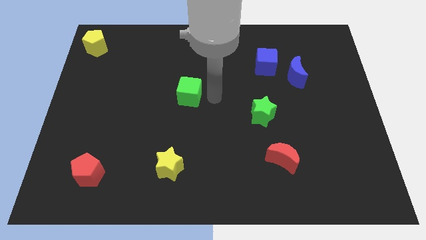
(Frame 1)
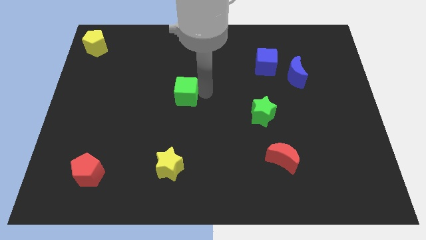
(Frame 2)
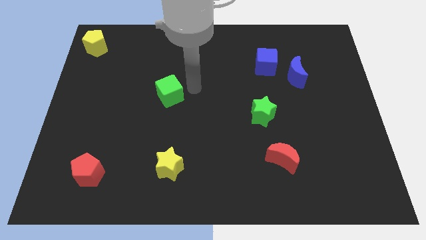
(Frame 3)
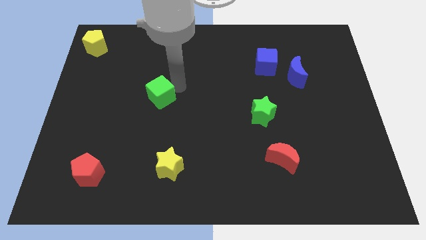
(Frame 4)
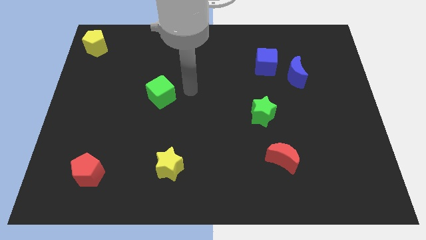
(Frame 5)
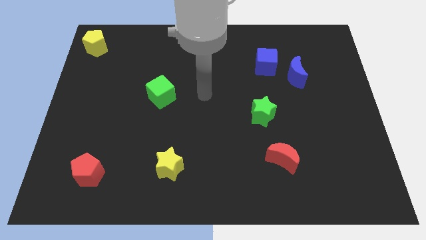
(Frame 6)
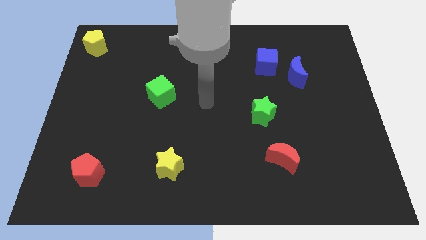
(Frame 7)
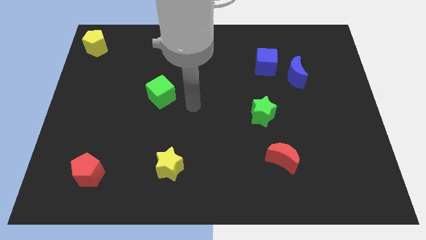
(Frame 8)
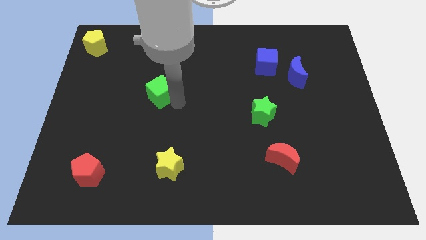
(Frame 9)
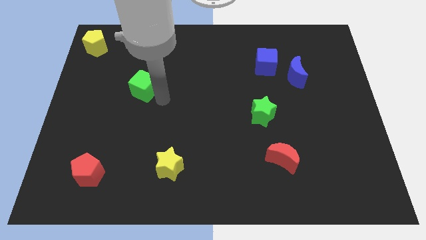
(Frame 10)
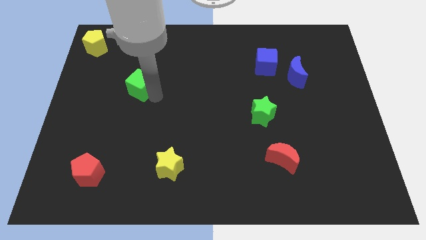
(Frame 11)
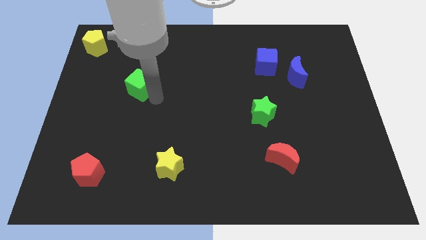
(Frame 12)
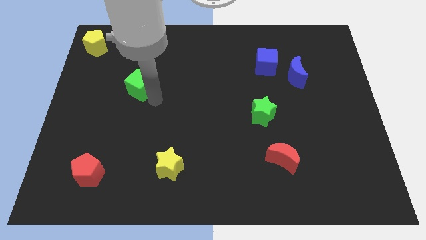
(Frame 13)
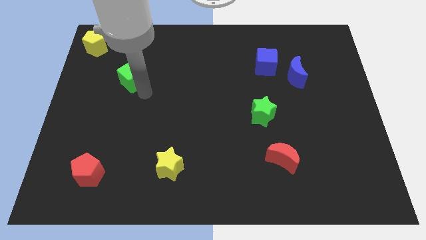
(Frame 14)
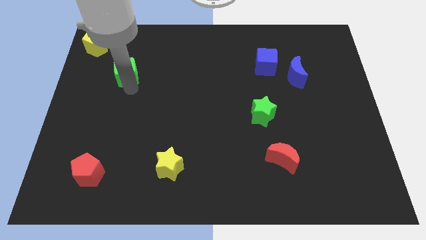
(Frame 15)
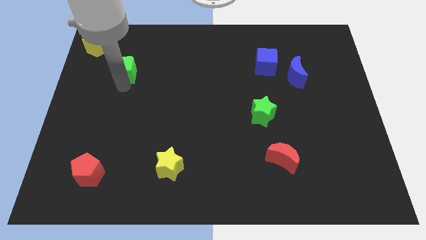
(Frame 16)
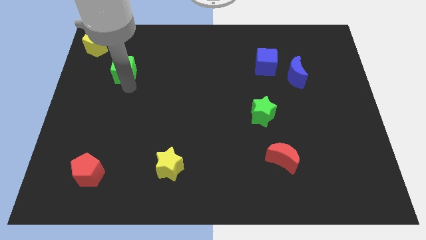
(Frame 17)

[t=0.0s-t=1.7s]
slide the green cube diagonally top left to the yellow star

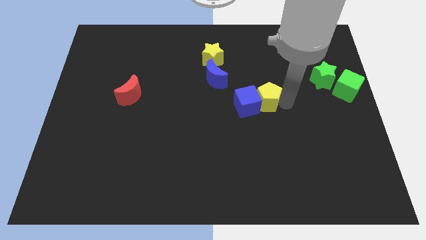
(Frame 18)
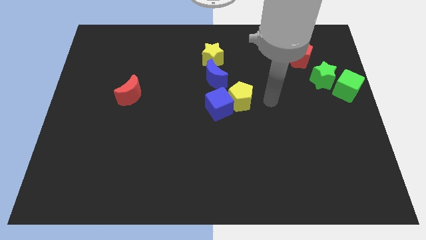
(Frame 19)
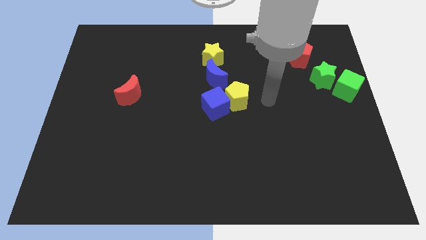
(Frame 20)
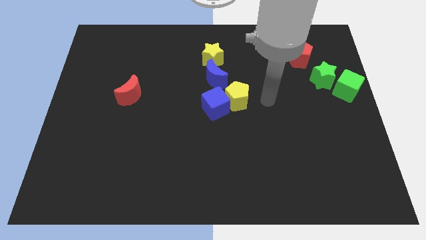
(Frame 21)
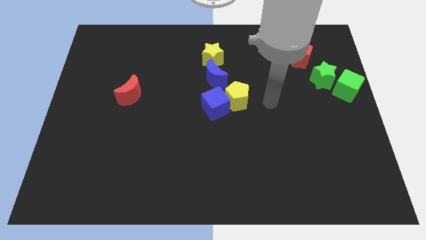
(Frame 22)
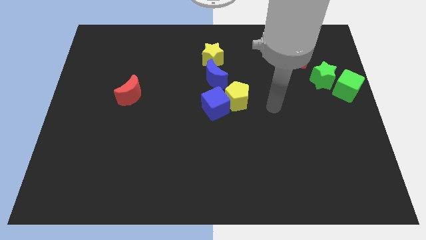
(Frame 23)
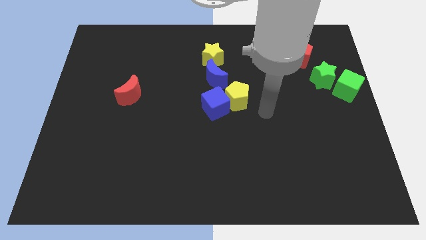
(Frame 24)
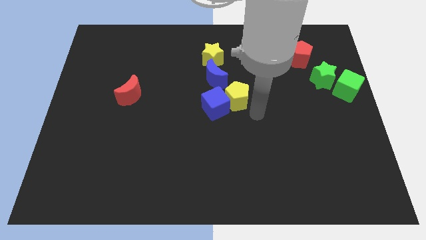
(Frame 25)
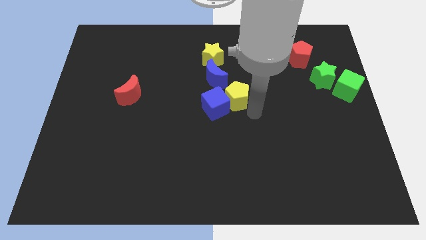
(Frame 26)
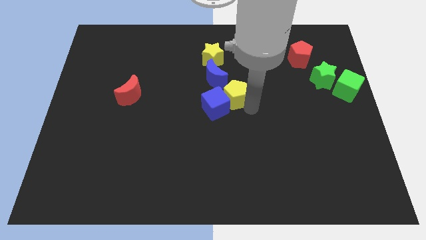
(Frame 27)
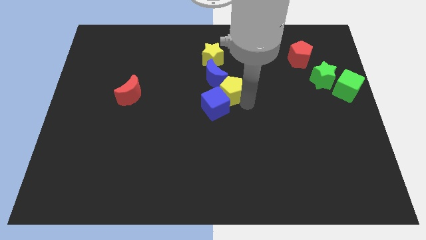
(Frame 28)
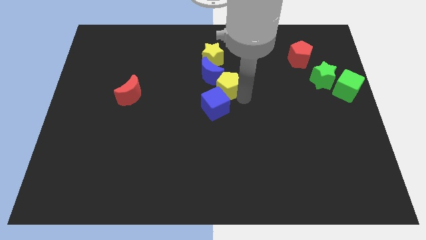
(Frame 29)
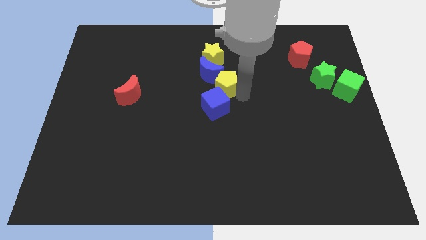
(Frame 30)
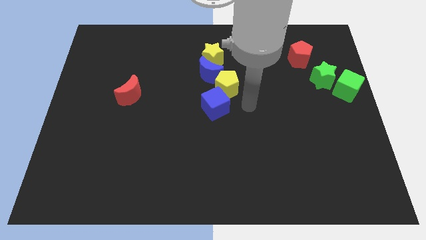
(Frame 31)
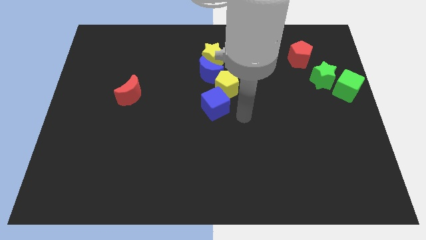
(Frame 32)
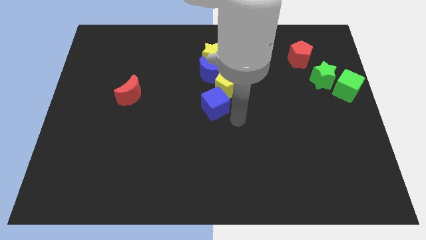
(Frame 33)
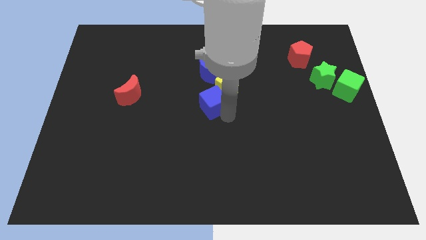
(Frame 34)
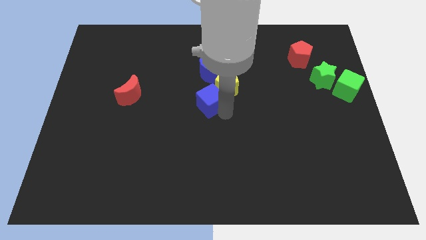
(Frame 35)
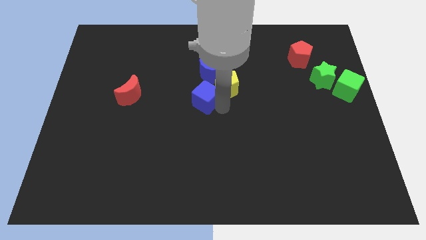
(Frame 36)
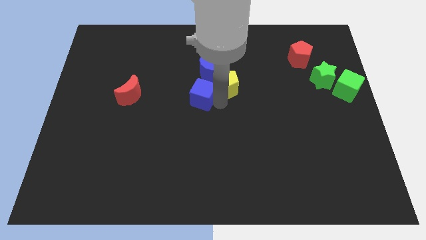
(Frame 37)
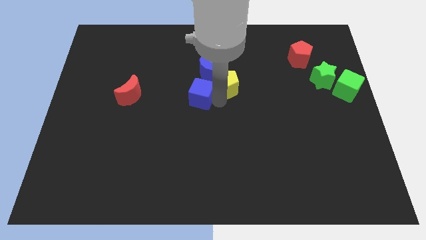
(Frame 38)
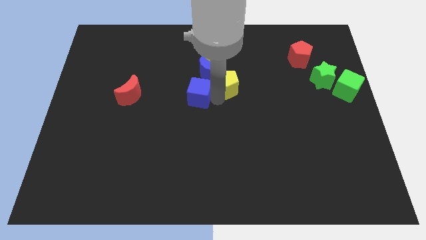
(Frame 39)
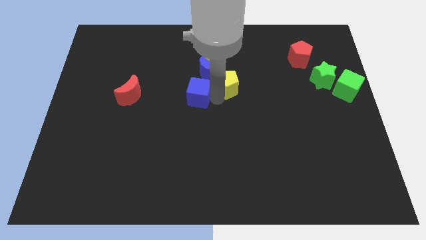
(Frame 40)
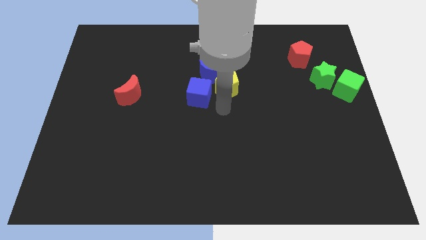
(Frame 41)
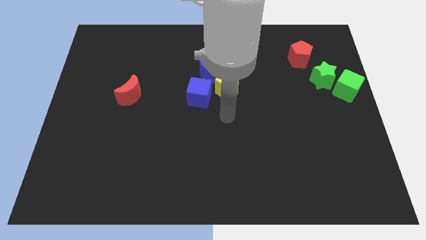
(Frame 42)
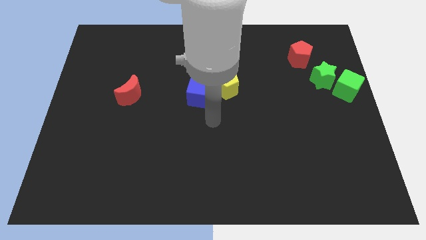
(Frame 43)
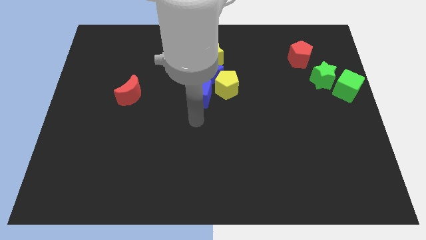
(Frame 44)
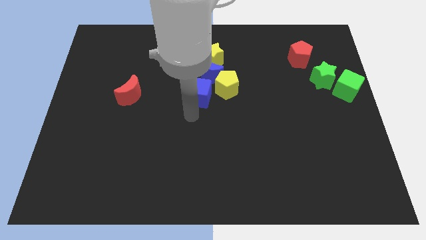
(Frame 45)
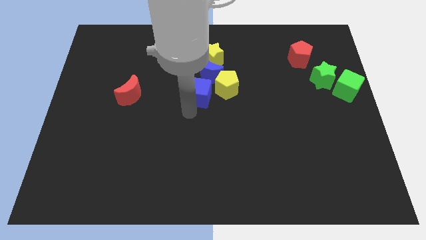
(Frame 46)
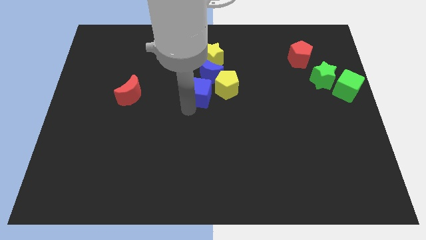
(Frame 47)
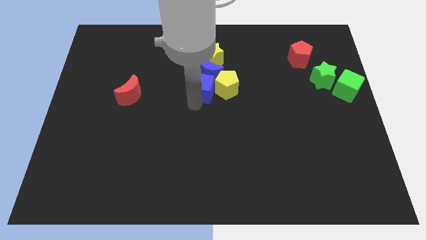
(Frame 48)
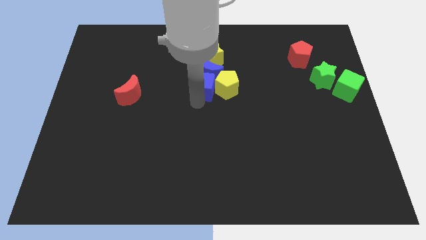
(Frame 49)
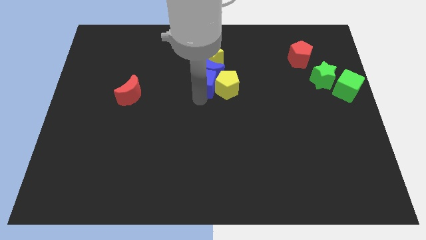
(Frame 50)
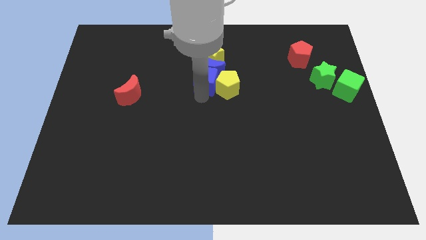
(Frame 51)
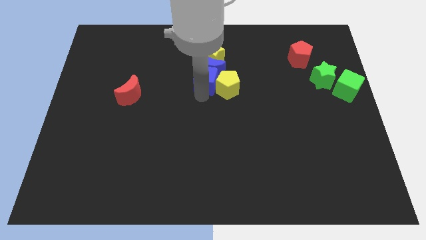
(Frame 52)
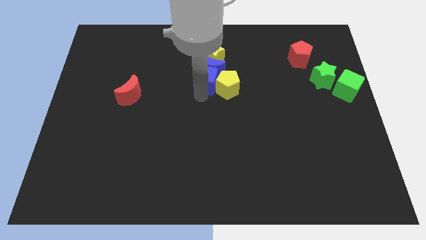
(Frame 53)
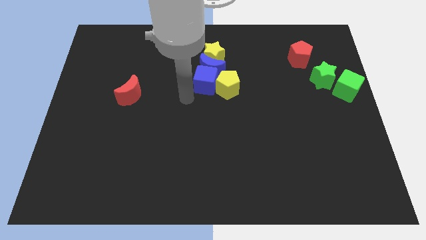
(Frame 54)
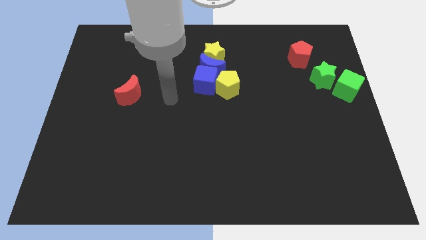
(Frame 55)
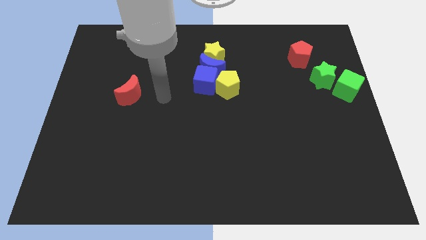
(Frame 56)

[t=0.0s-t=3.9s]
move the yellow and blue blocks to the top of the board

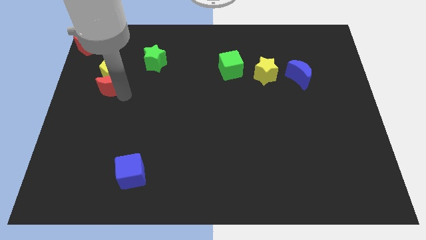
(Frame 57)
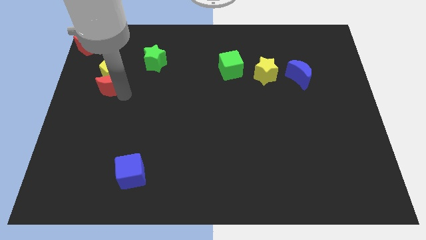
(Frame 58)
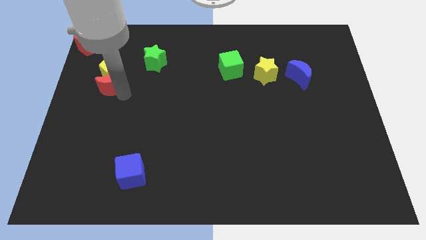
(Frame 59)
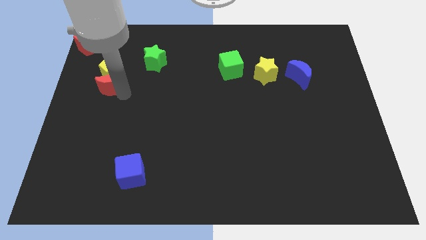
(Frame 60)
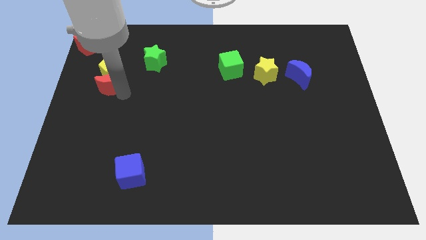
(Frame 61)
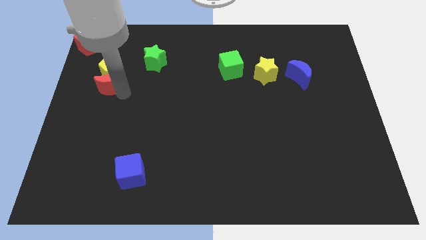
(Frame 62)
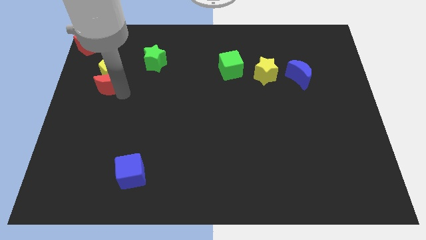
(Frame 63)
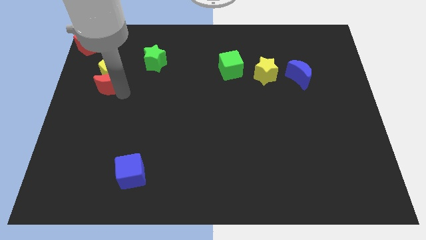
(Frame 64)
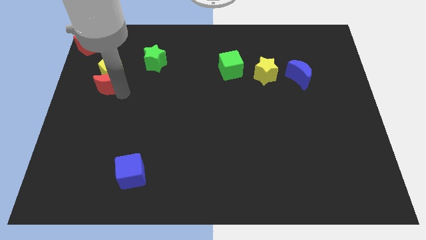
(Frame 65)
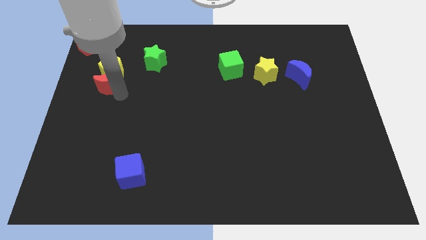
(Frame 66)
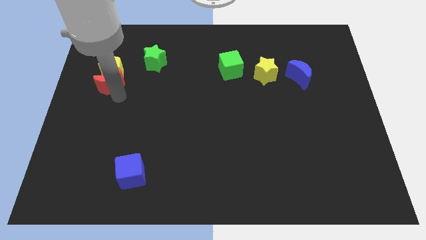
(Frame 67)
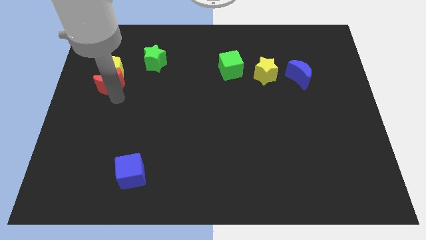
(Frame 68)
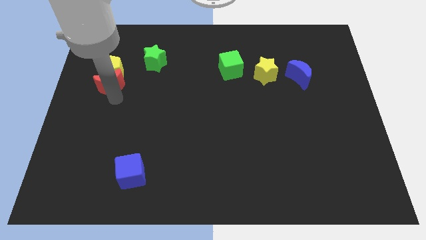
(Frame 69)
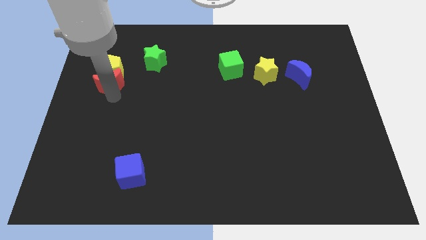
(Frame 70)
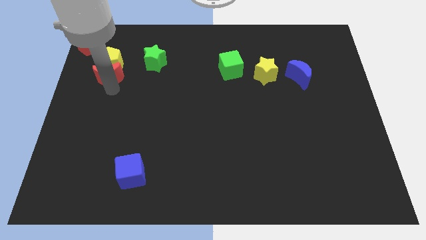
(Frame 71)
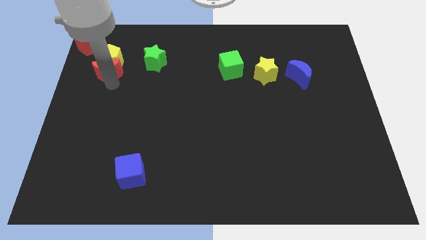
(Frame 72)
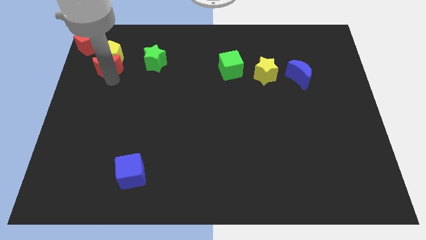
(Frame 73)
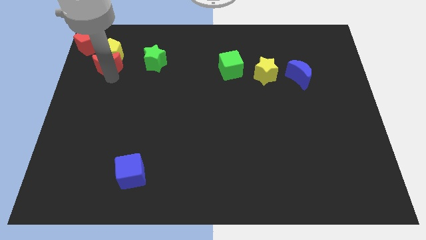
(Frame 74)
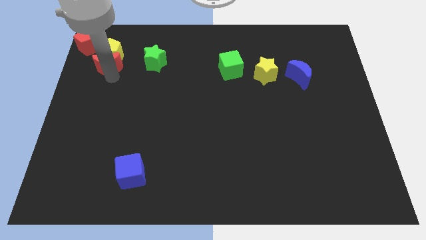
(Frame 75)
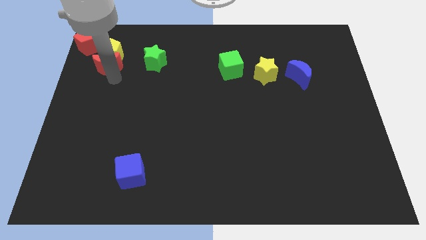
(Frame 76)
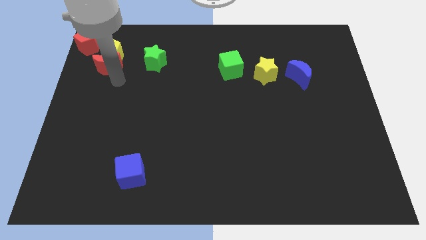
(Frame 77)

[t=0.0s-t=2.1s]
move the red crescent and the yellow pentagon to the top left

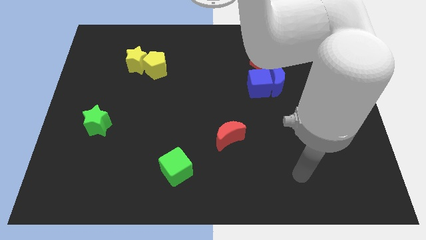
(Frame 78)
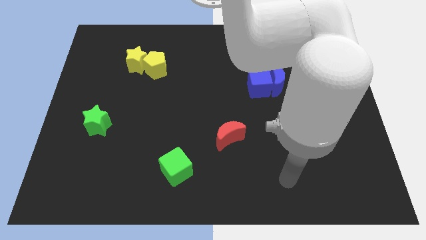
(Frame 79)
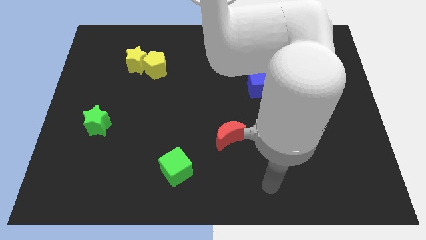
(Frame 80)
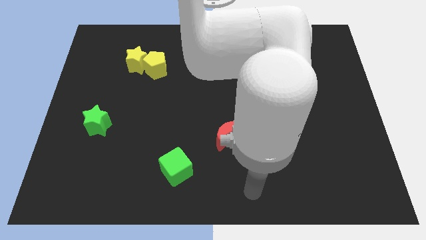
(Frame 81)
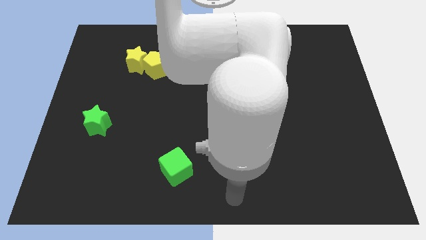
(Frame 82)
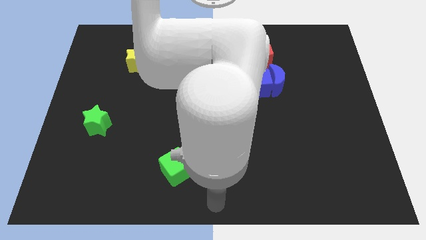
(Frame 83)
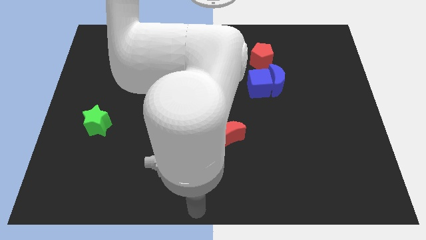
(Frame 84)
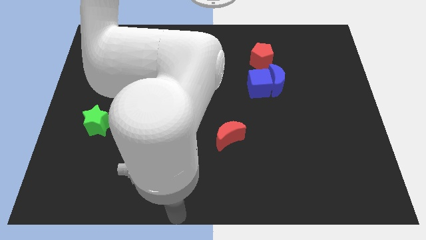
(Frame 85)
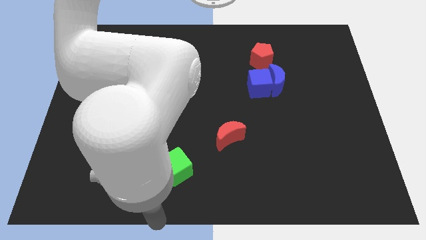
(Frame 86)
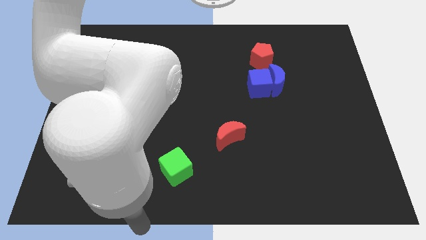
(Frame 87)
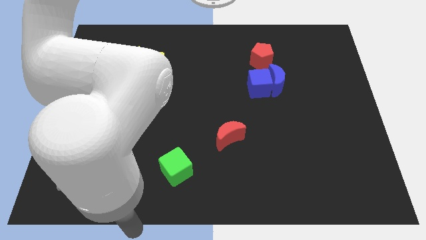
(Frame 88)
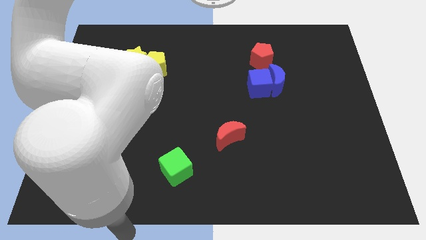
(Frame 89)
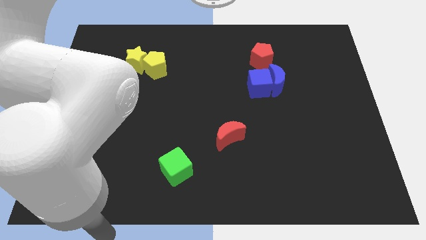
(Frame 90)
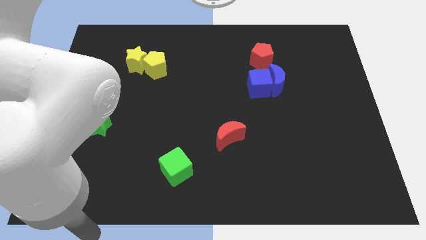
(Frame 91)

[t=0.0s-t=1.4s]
move the arm to the bottom side of the board
